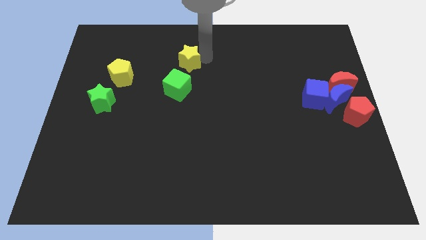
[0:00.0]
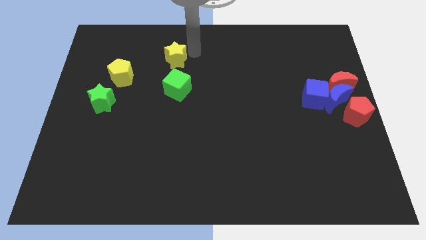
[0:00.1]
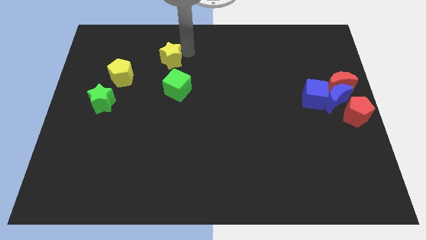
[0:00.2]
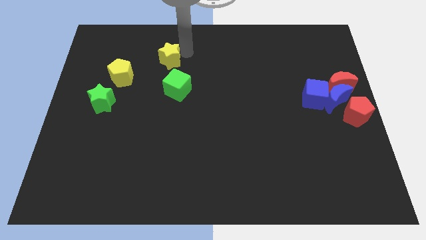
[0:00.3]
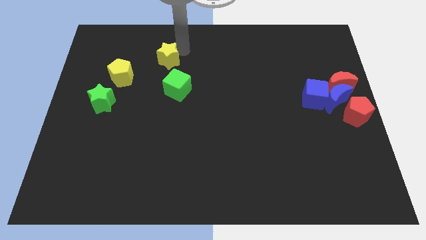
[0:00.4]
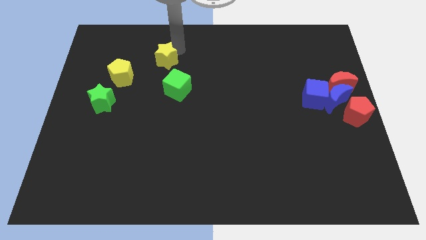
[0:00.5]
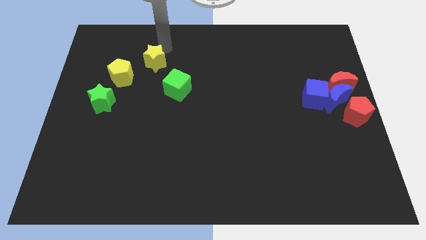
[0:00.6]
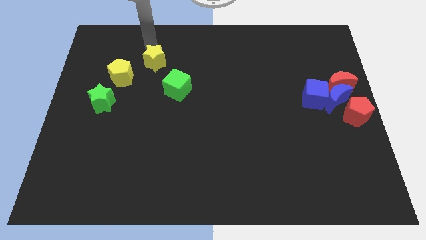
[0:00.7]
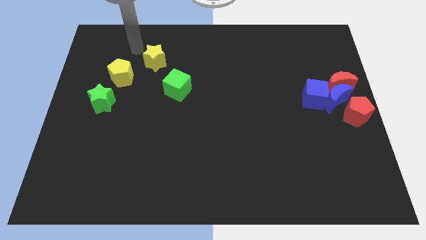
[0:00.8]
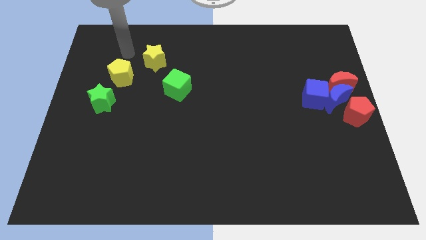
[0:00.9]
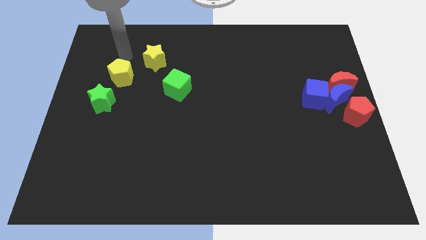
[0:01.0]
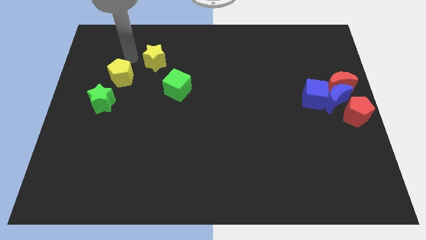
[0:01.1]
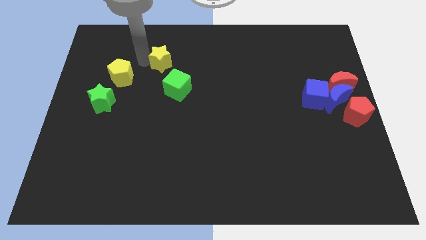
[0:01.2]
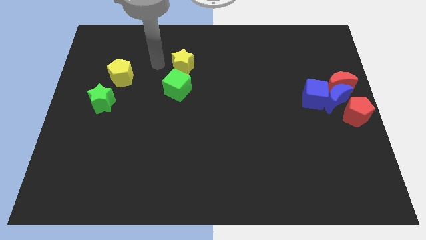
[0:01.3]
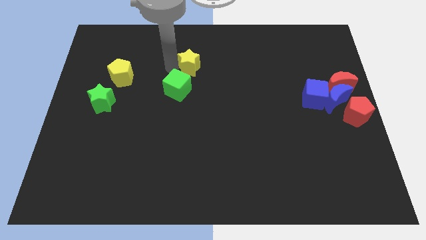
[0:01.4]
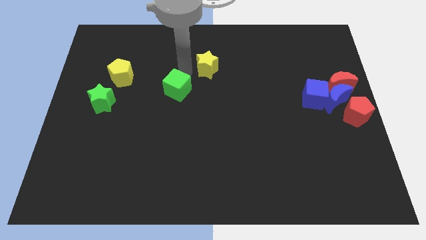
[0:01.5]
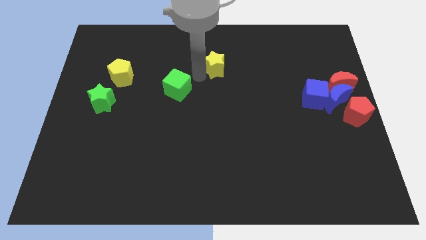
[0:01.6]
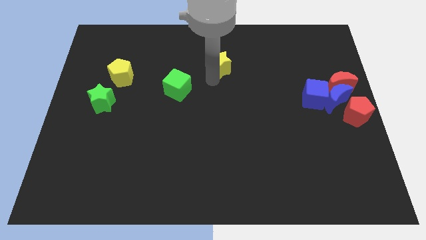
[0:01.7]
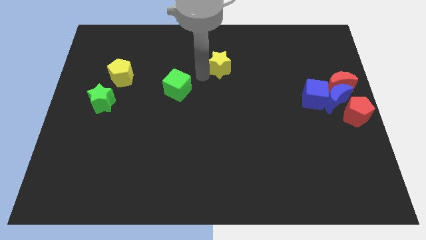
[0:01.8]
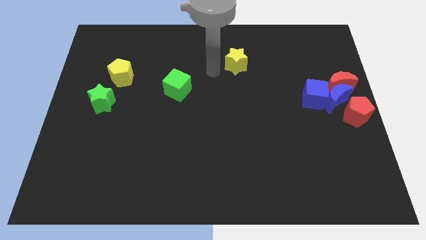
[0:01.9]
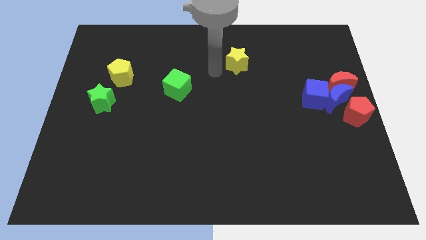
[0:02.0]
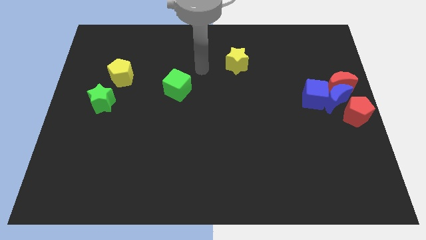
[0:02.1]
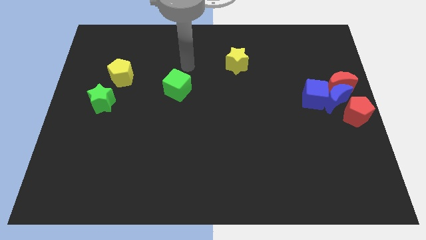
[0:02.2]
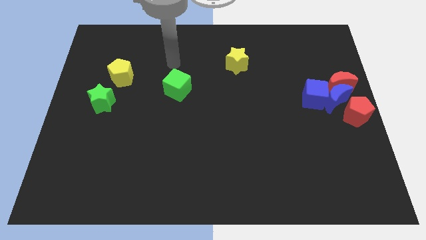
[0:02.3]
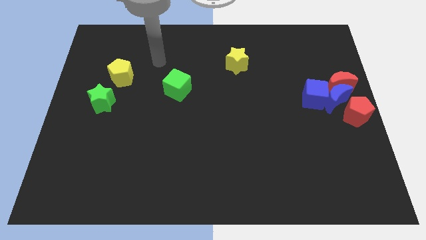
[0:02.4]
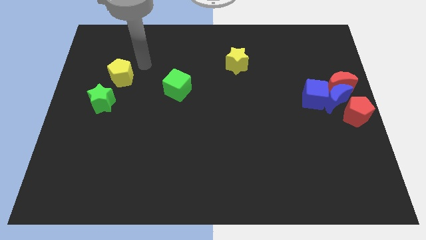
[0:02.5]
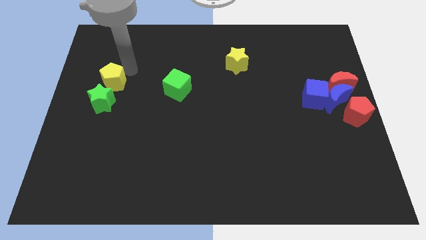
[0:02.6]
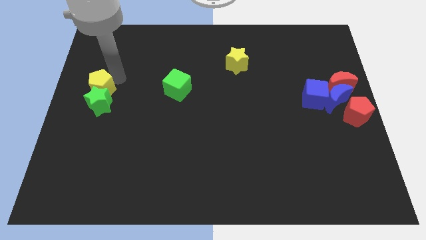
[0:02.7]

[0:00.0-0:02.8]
move the yellow star towards top right side

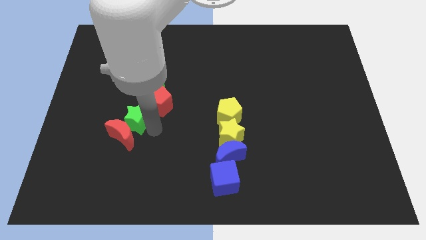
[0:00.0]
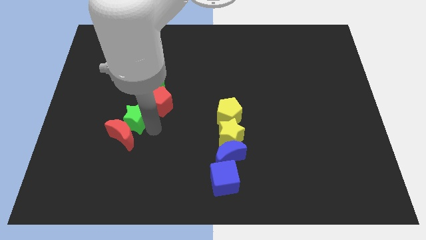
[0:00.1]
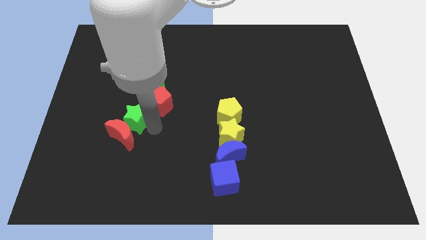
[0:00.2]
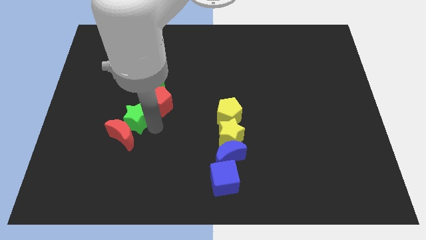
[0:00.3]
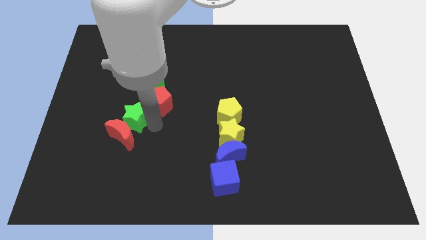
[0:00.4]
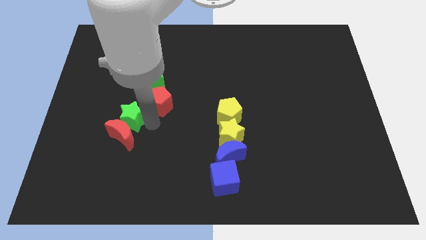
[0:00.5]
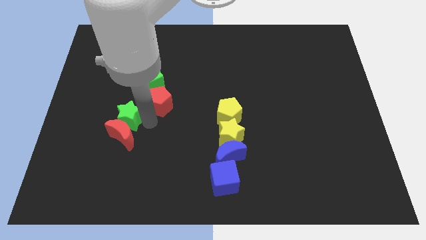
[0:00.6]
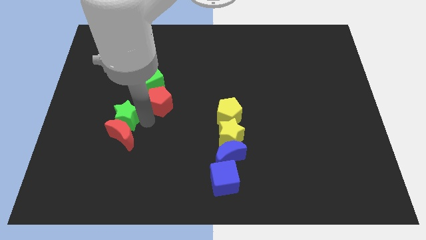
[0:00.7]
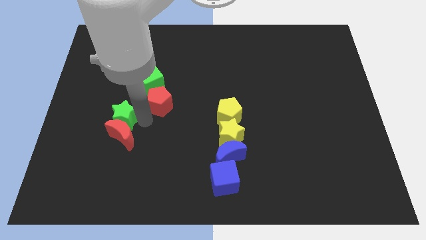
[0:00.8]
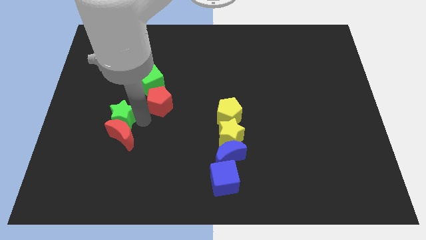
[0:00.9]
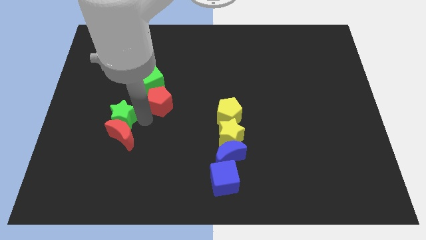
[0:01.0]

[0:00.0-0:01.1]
place the green star to the top of the red crescent

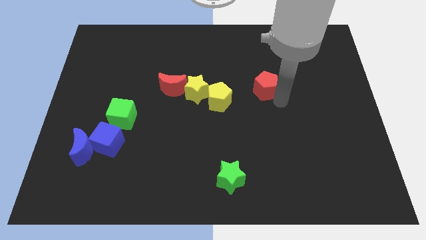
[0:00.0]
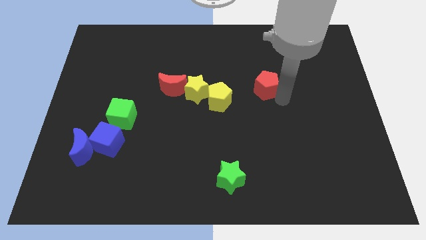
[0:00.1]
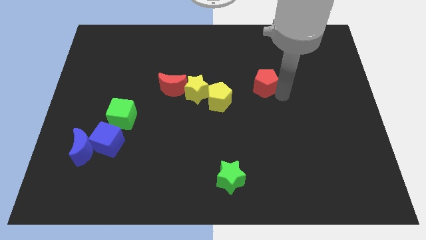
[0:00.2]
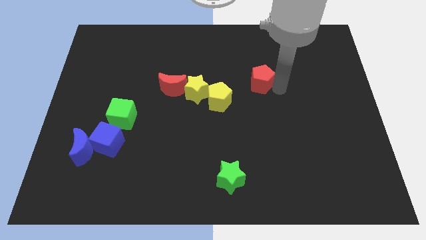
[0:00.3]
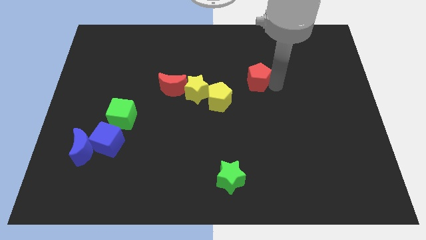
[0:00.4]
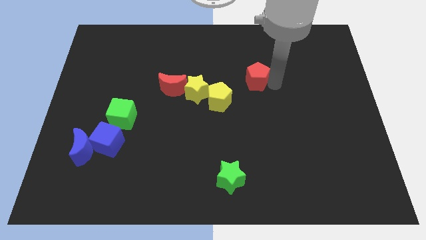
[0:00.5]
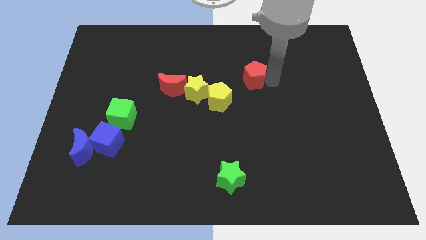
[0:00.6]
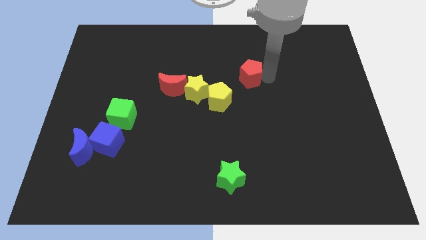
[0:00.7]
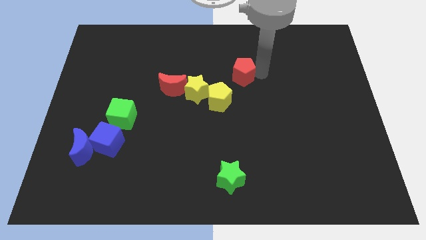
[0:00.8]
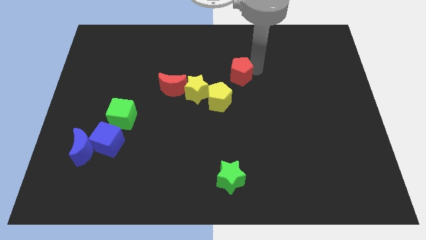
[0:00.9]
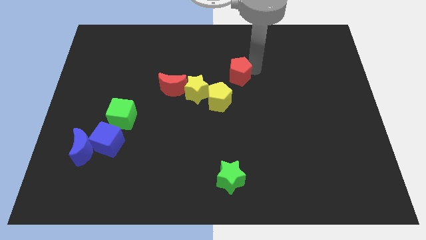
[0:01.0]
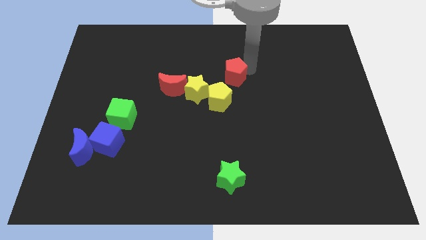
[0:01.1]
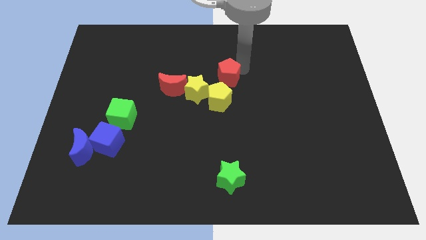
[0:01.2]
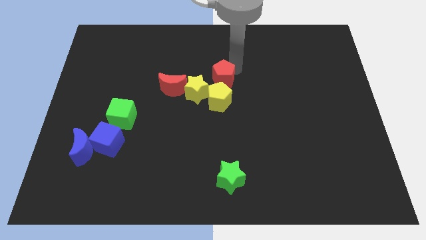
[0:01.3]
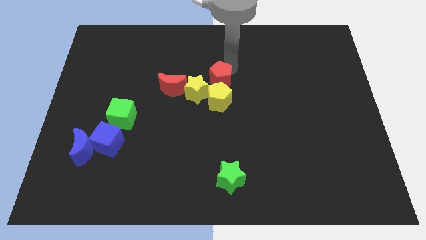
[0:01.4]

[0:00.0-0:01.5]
push red pentagon above yellow pentagon

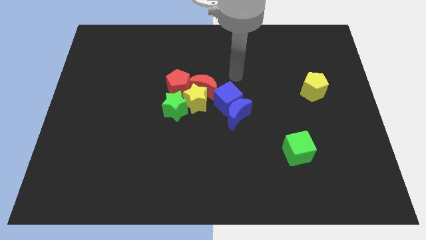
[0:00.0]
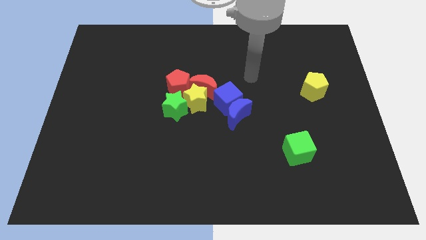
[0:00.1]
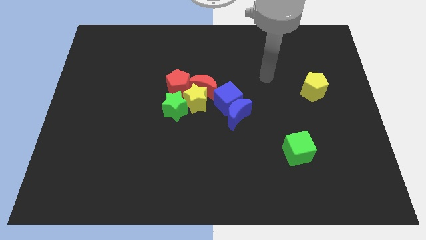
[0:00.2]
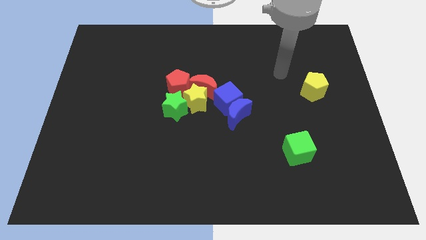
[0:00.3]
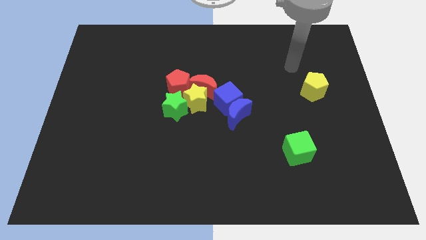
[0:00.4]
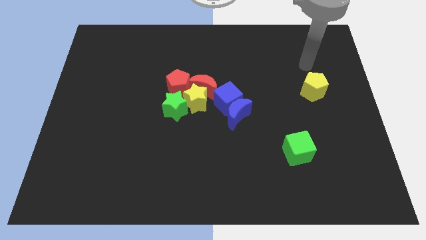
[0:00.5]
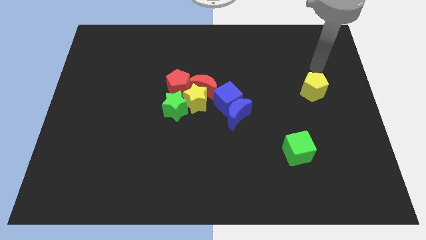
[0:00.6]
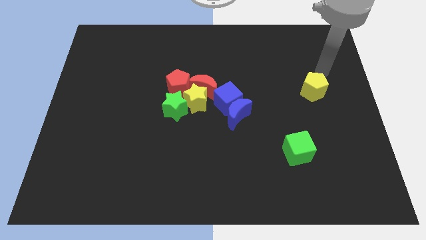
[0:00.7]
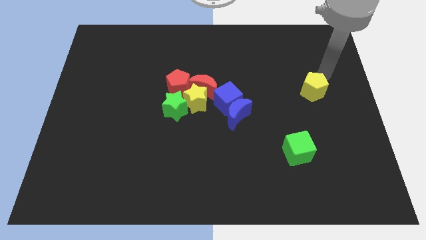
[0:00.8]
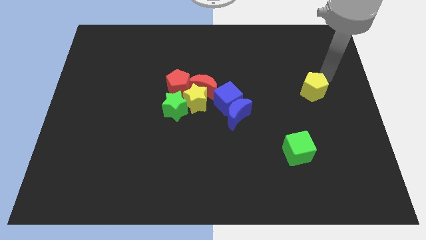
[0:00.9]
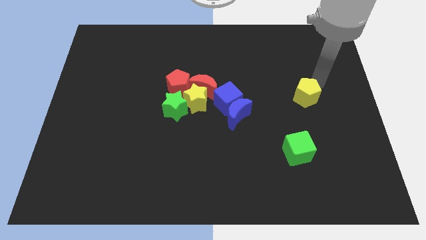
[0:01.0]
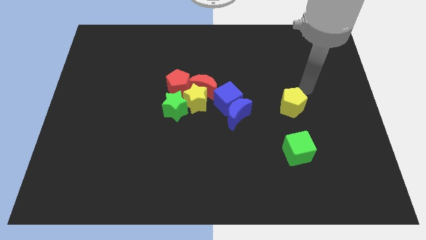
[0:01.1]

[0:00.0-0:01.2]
drag the yellow pentagon vertically above the green cube

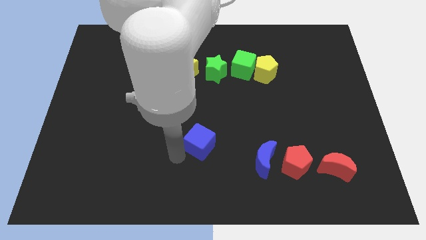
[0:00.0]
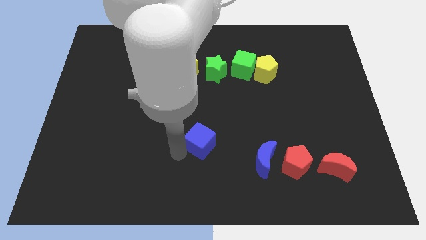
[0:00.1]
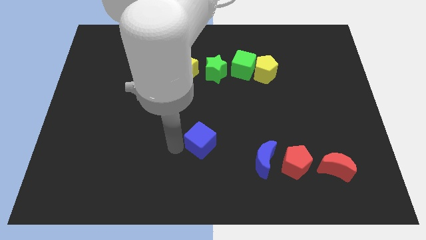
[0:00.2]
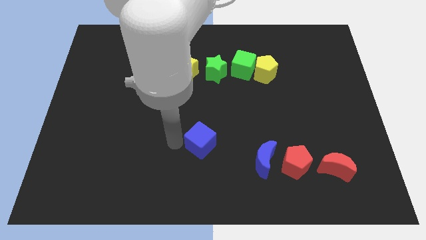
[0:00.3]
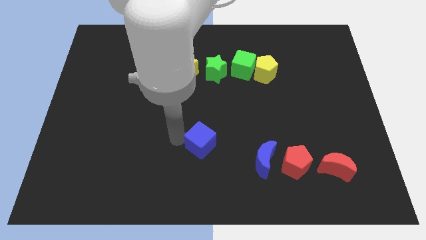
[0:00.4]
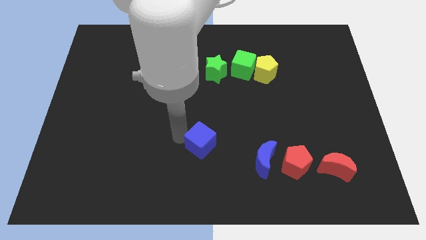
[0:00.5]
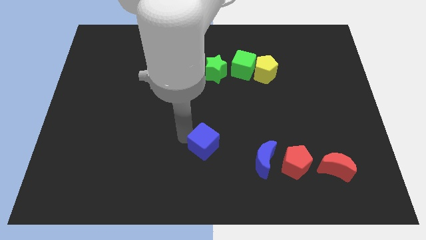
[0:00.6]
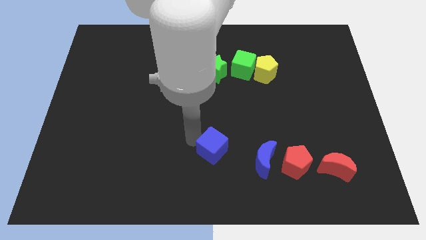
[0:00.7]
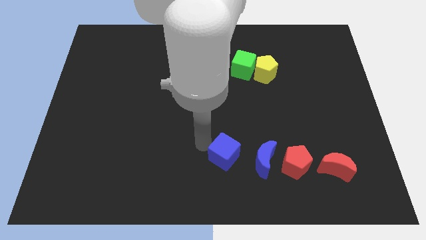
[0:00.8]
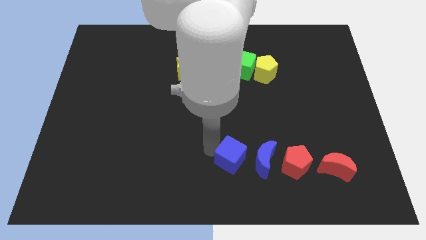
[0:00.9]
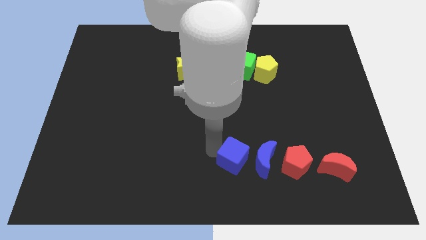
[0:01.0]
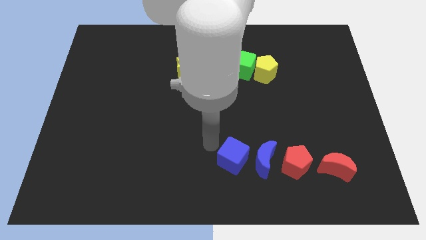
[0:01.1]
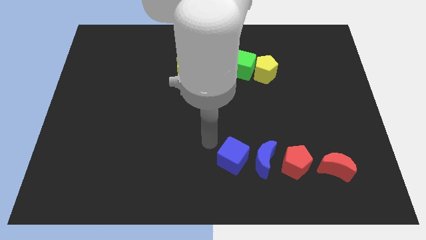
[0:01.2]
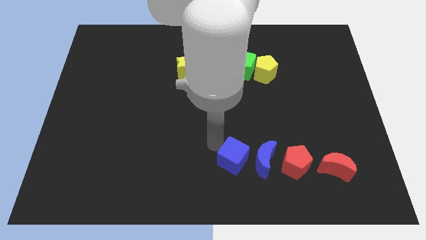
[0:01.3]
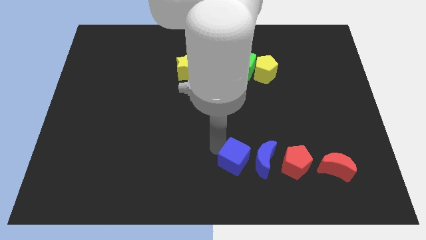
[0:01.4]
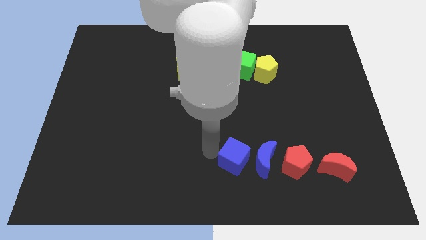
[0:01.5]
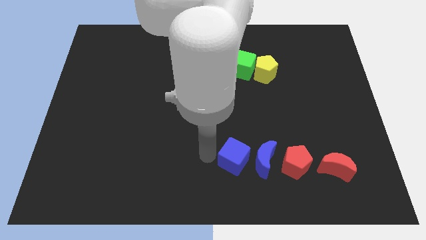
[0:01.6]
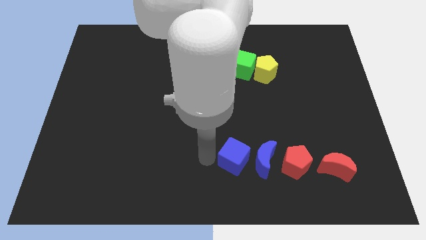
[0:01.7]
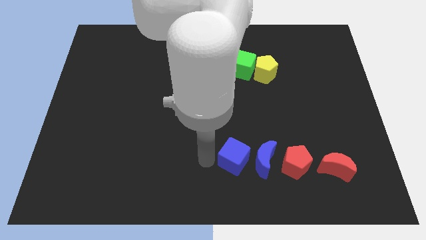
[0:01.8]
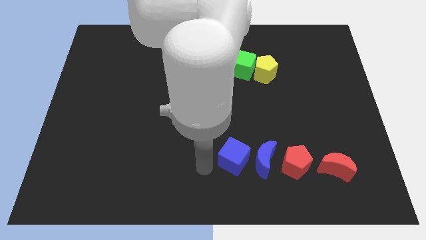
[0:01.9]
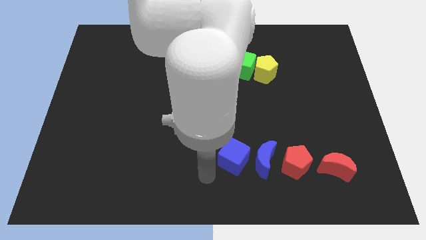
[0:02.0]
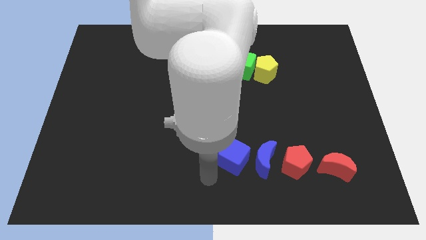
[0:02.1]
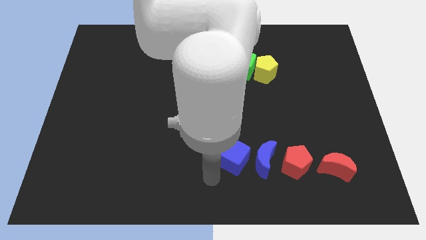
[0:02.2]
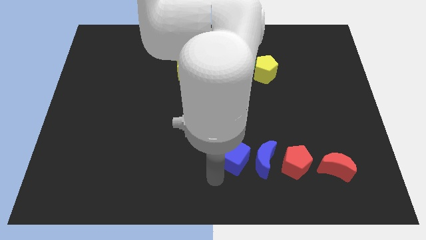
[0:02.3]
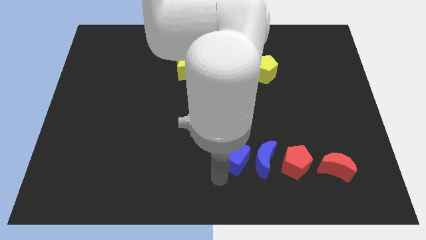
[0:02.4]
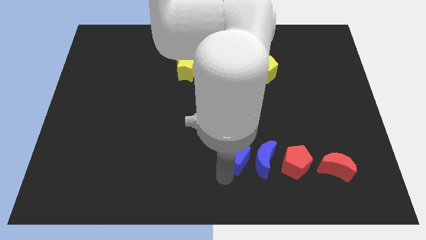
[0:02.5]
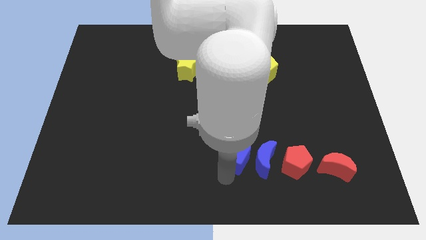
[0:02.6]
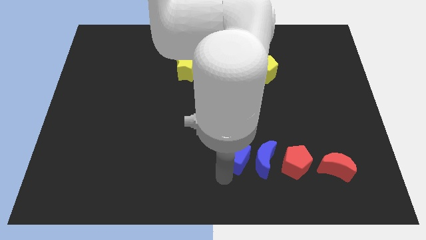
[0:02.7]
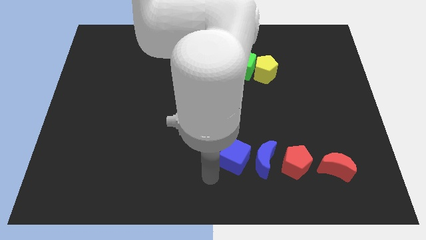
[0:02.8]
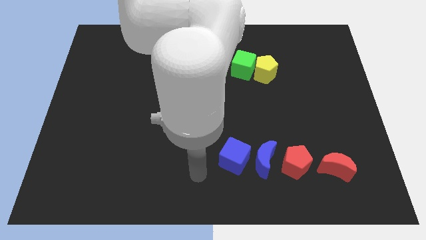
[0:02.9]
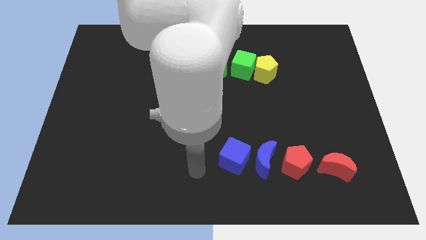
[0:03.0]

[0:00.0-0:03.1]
put the blue cube to the left of the blue crescent
